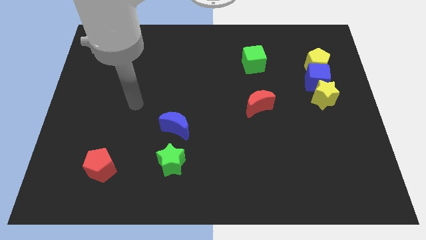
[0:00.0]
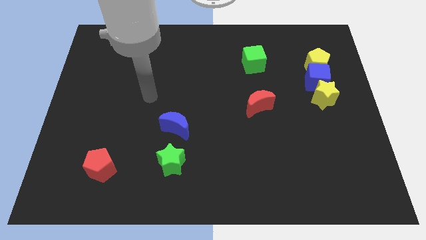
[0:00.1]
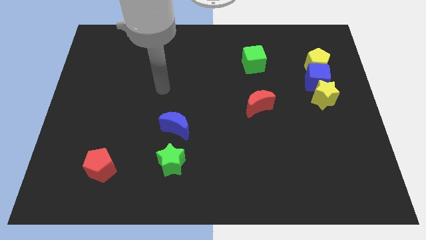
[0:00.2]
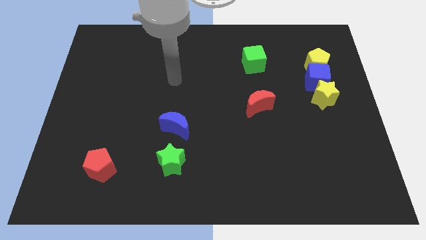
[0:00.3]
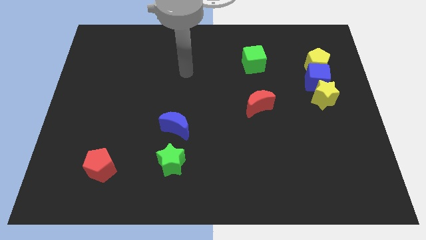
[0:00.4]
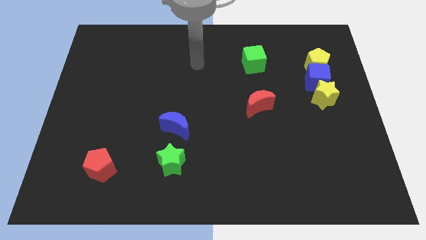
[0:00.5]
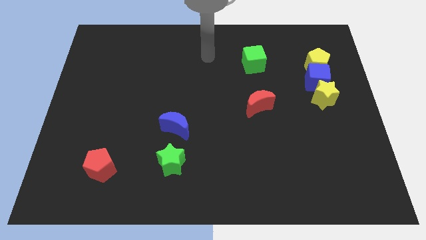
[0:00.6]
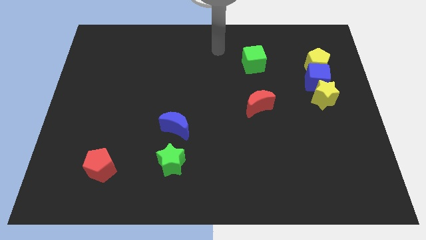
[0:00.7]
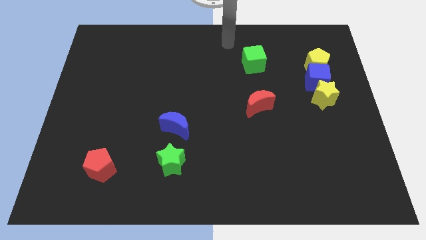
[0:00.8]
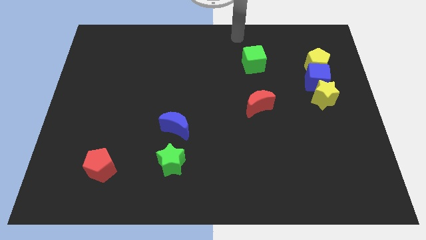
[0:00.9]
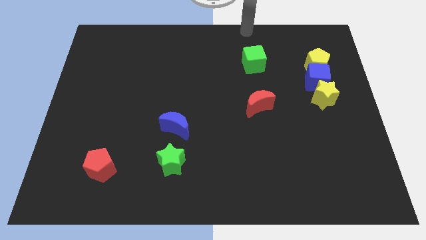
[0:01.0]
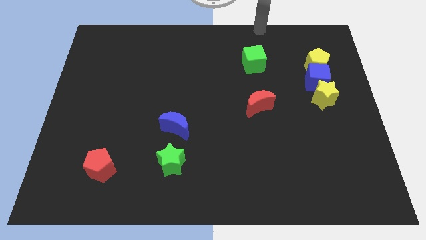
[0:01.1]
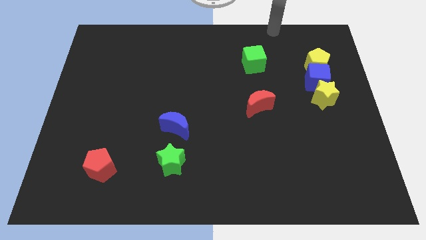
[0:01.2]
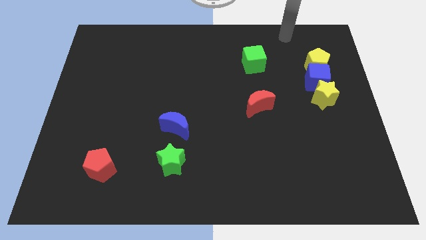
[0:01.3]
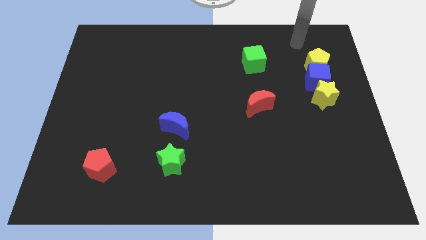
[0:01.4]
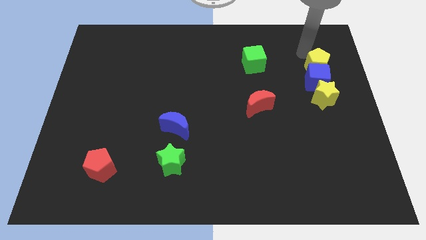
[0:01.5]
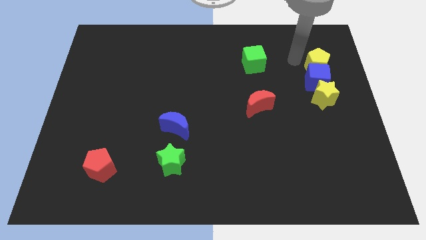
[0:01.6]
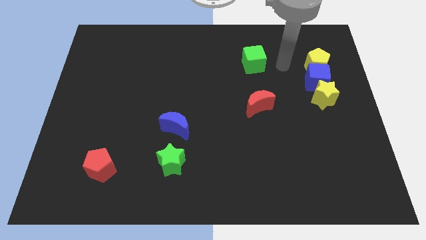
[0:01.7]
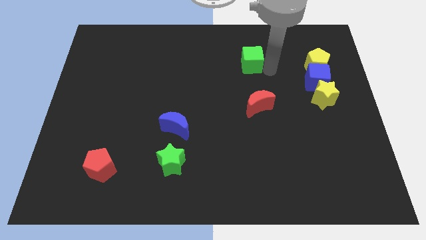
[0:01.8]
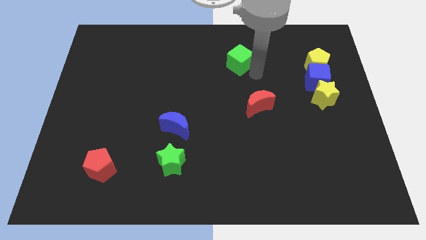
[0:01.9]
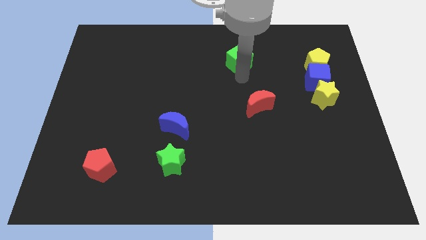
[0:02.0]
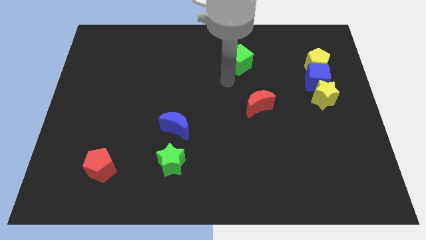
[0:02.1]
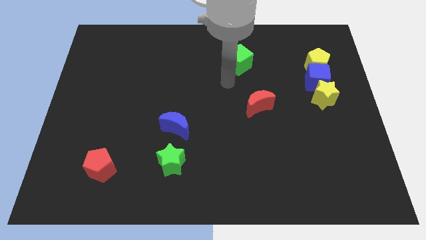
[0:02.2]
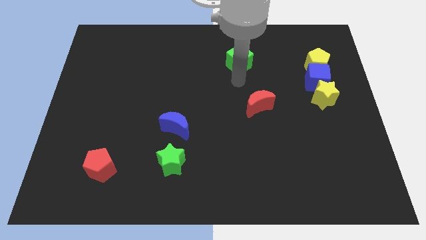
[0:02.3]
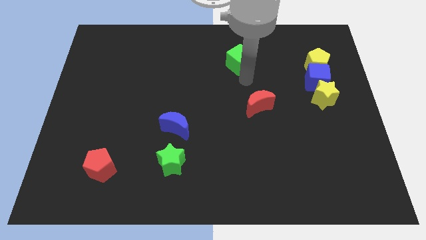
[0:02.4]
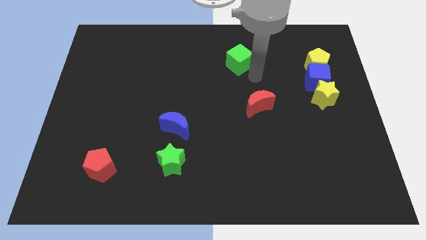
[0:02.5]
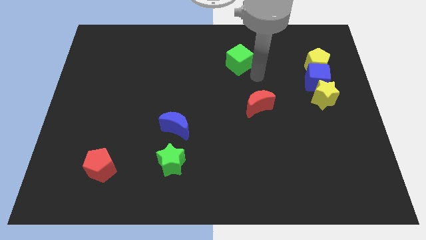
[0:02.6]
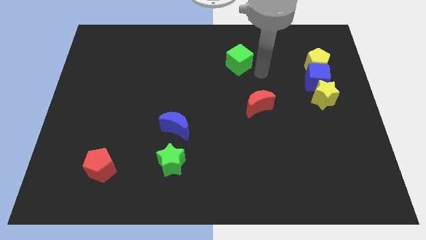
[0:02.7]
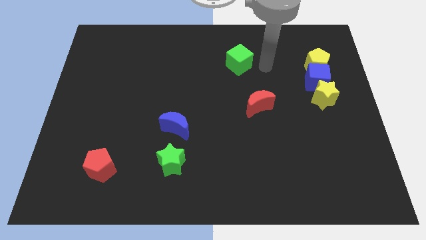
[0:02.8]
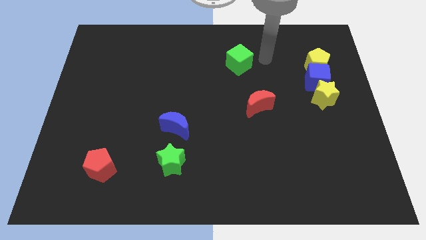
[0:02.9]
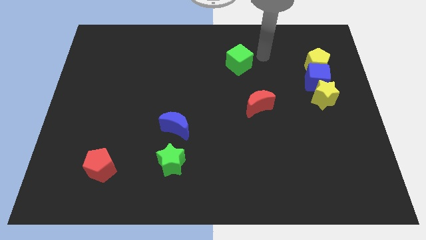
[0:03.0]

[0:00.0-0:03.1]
slightly move the green cube towards the left

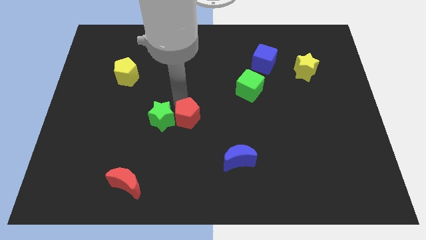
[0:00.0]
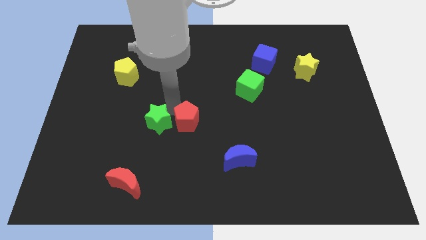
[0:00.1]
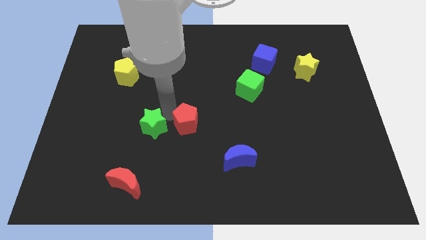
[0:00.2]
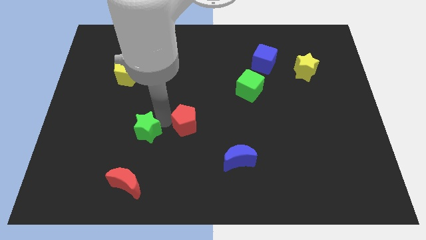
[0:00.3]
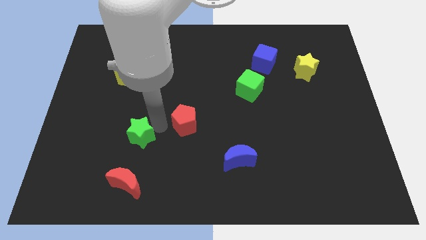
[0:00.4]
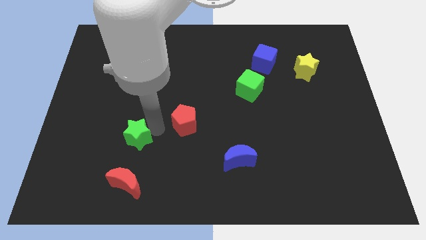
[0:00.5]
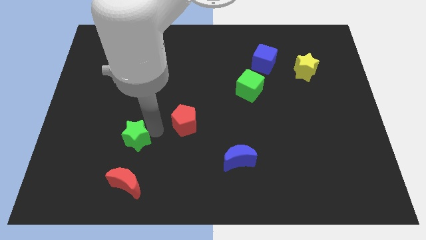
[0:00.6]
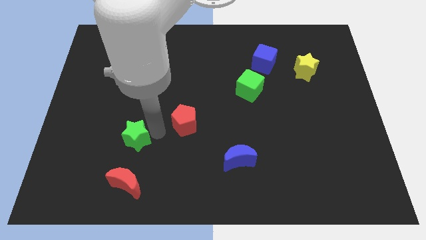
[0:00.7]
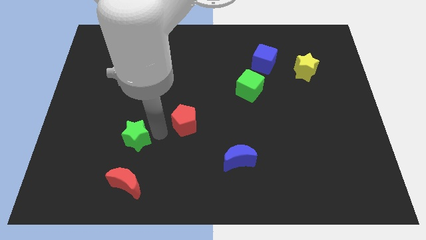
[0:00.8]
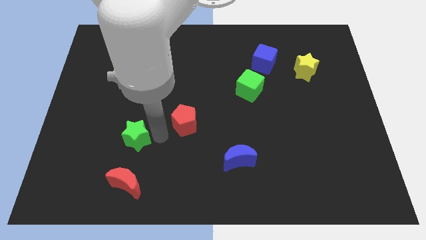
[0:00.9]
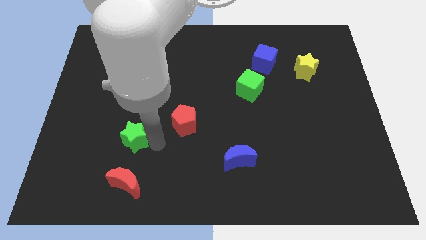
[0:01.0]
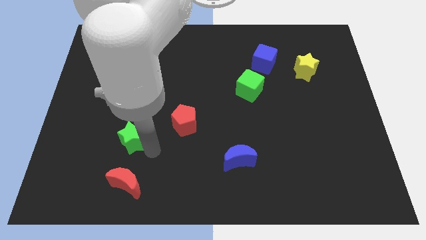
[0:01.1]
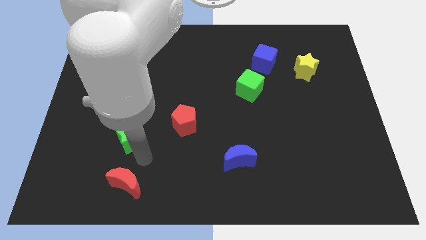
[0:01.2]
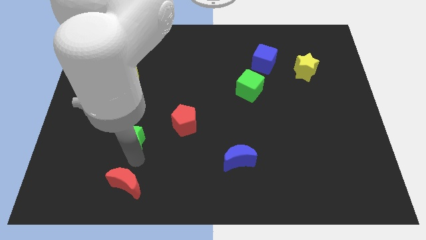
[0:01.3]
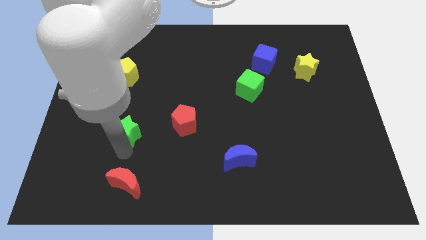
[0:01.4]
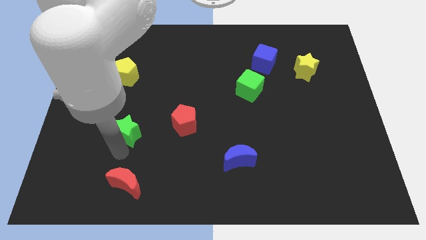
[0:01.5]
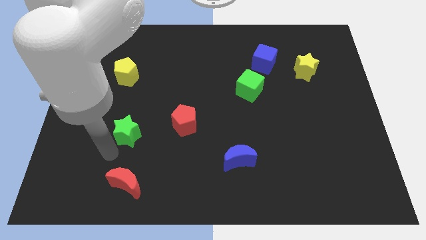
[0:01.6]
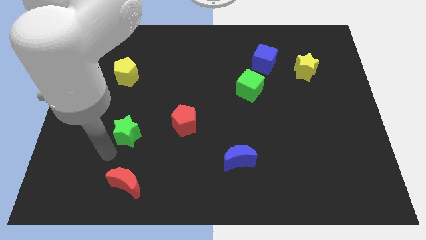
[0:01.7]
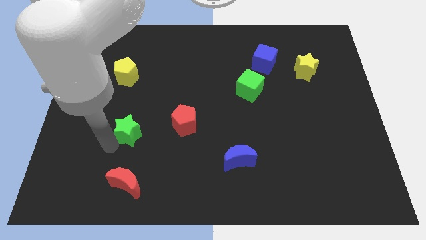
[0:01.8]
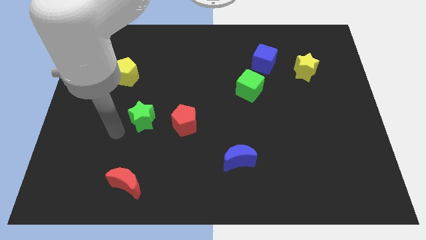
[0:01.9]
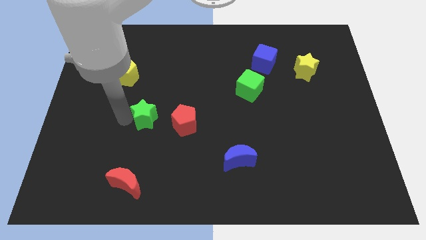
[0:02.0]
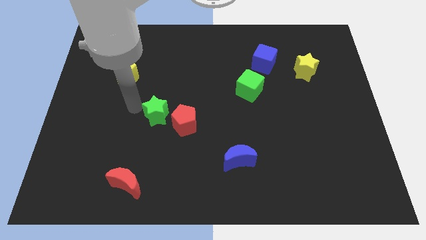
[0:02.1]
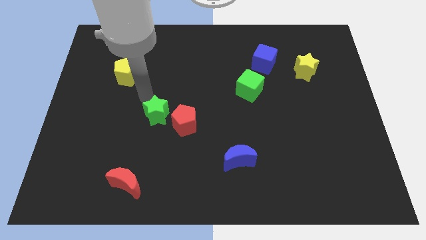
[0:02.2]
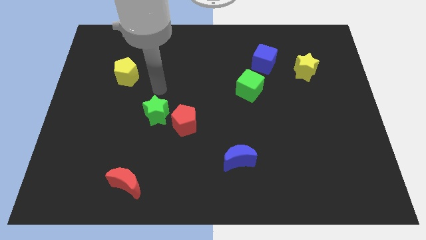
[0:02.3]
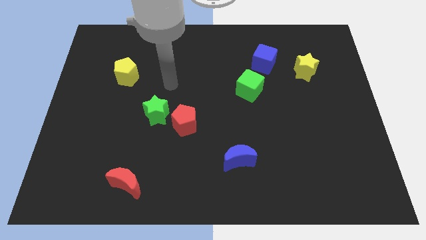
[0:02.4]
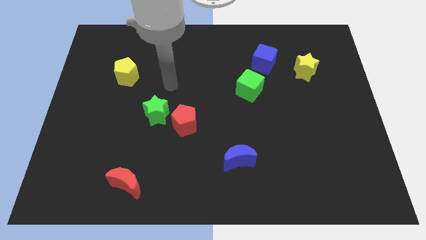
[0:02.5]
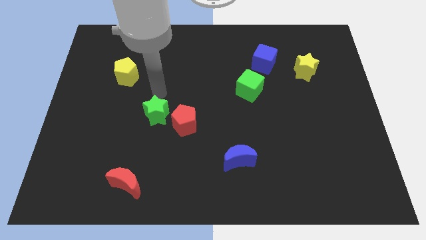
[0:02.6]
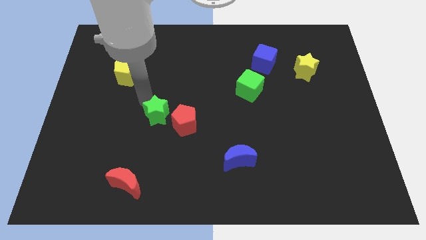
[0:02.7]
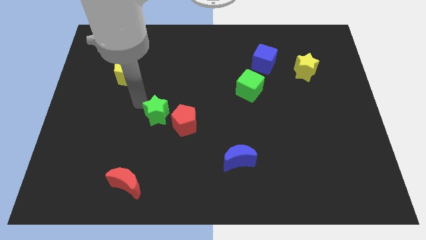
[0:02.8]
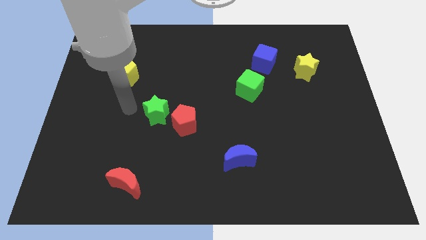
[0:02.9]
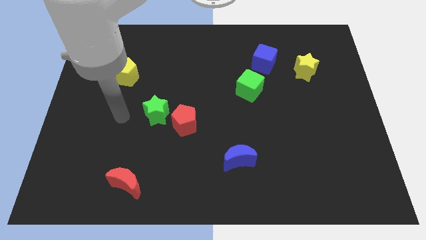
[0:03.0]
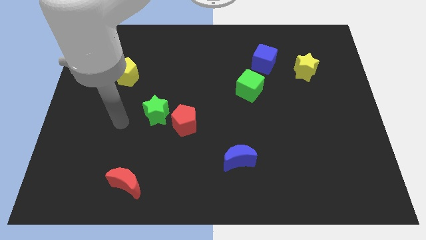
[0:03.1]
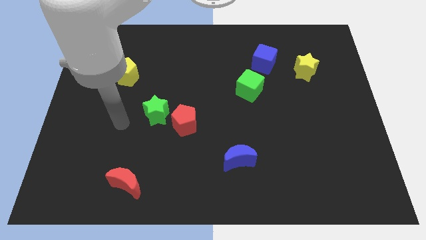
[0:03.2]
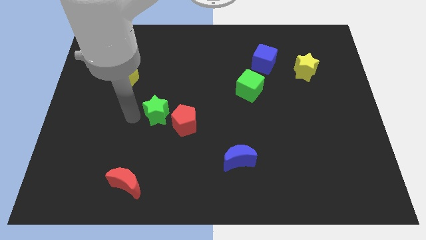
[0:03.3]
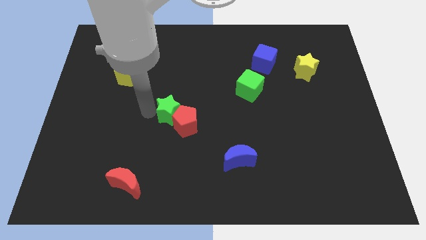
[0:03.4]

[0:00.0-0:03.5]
place the green star into the top left of the red pentagon

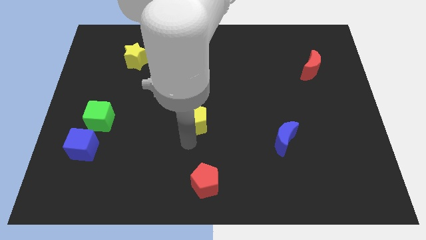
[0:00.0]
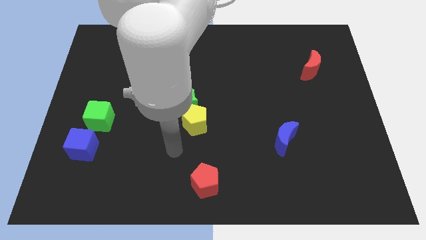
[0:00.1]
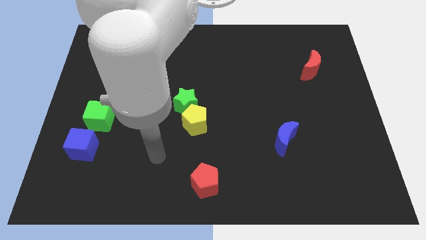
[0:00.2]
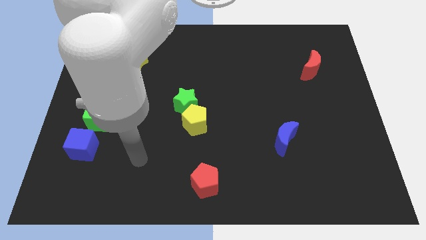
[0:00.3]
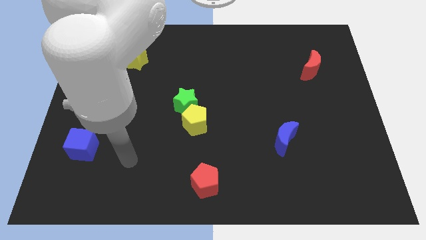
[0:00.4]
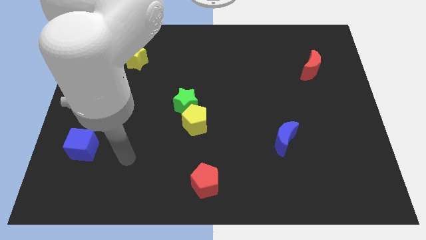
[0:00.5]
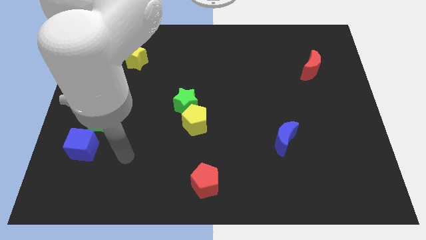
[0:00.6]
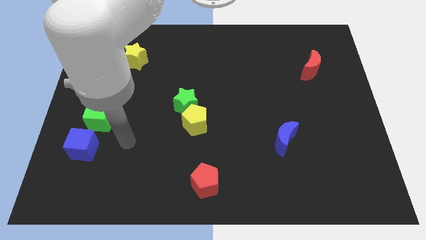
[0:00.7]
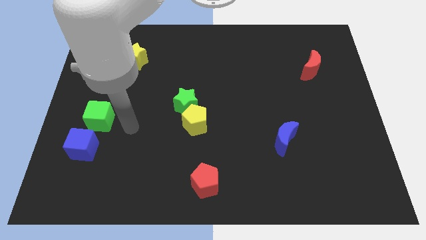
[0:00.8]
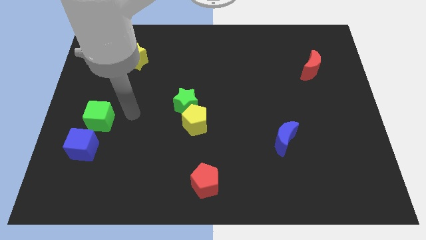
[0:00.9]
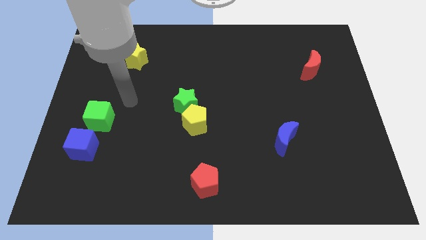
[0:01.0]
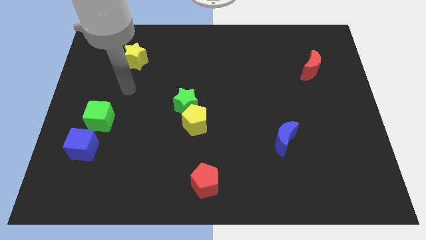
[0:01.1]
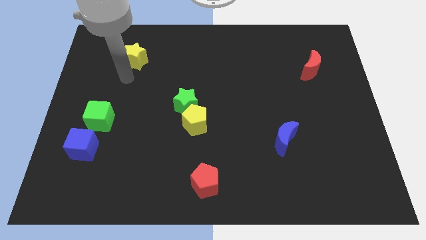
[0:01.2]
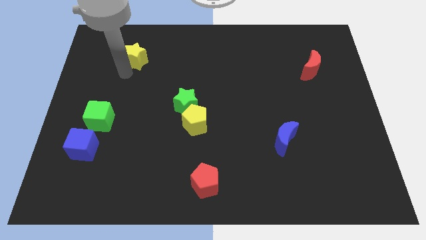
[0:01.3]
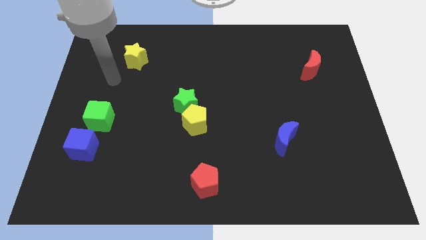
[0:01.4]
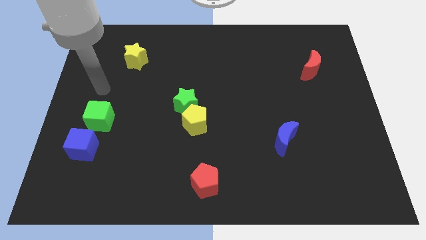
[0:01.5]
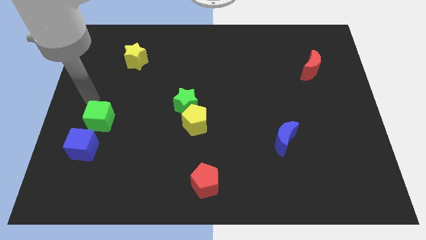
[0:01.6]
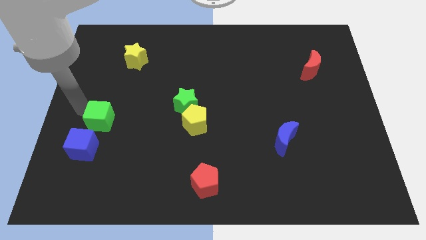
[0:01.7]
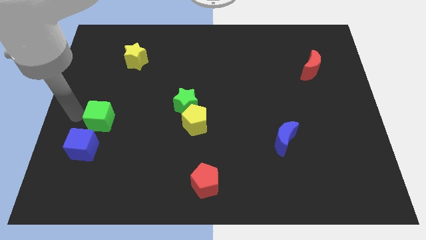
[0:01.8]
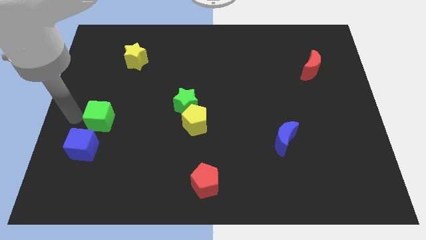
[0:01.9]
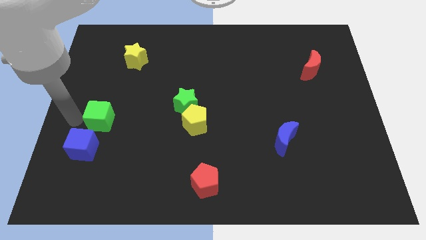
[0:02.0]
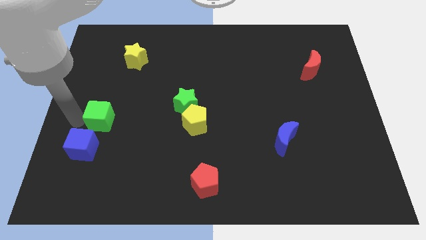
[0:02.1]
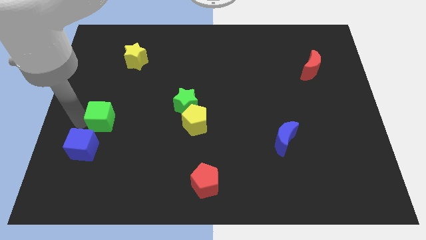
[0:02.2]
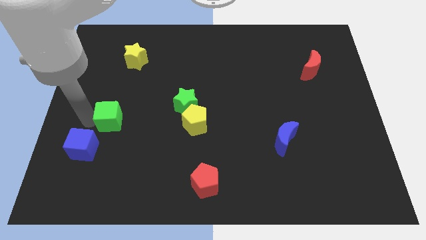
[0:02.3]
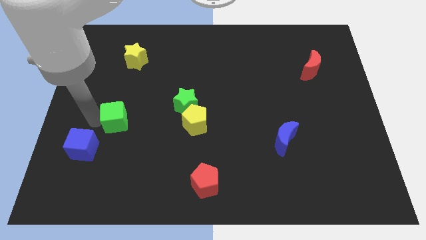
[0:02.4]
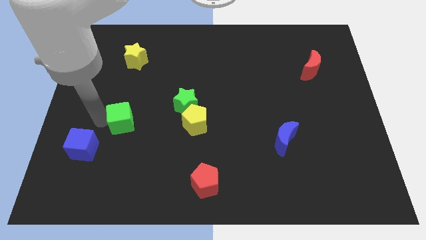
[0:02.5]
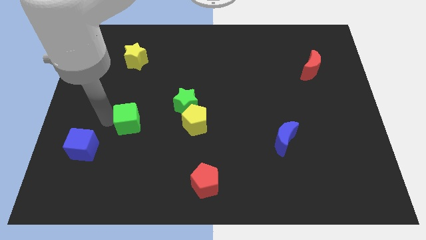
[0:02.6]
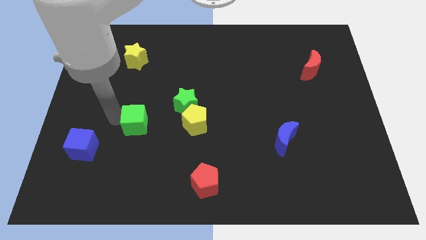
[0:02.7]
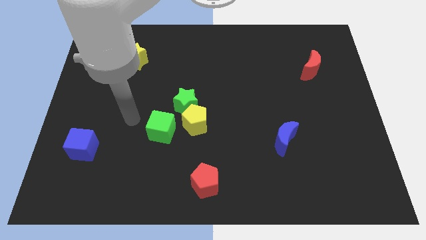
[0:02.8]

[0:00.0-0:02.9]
place the green cube at the bottom of yellow star
